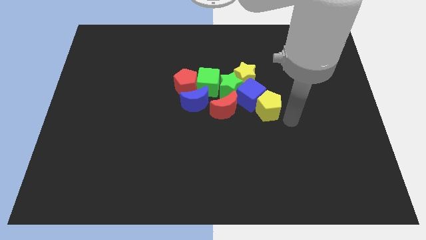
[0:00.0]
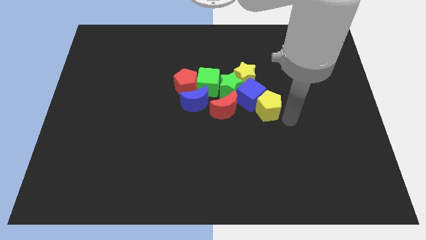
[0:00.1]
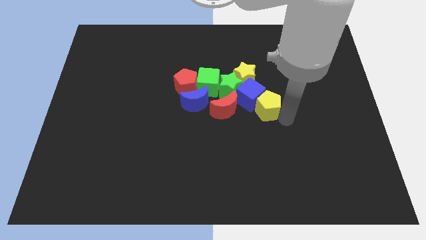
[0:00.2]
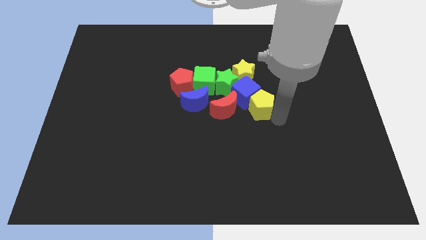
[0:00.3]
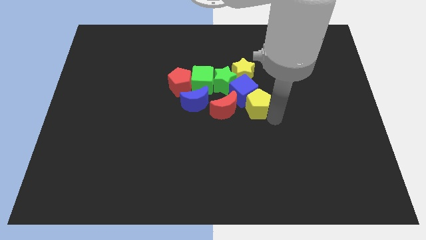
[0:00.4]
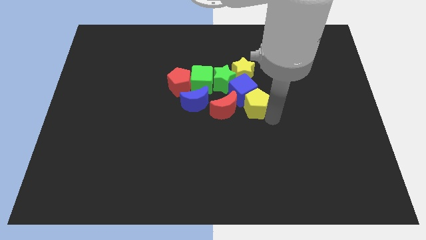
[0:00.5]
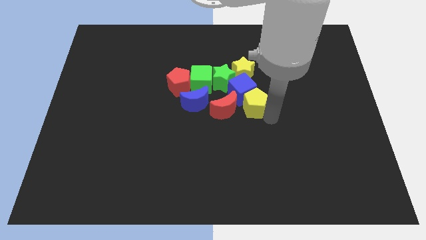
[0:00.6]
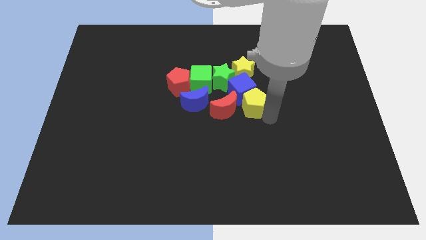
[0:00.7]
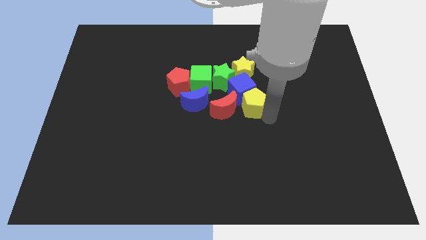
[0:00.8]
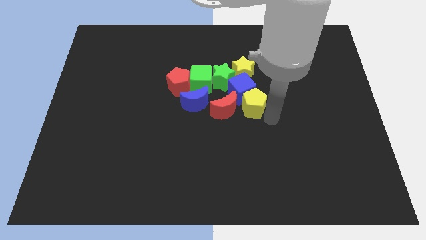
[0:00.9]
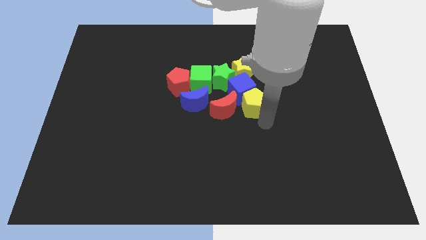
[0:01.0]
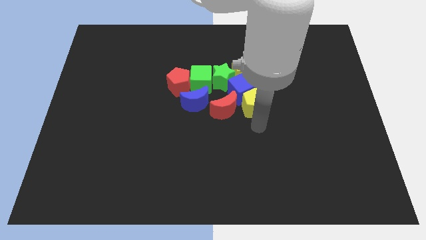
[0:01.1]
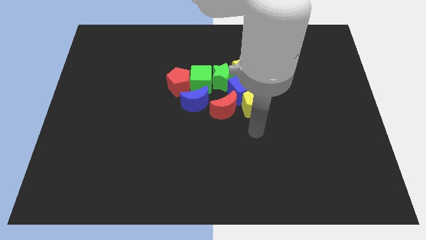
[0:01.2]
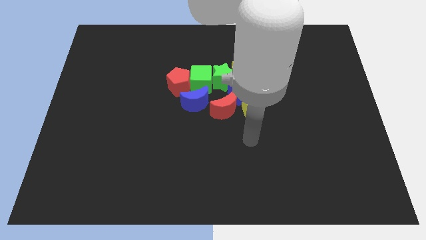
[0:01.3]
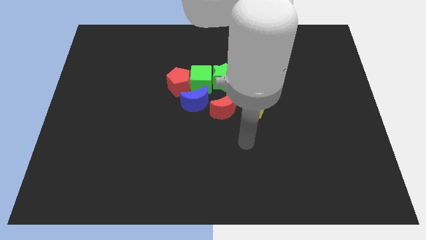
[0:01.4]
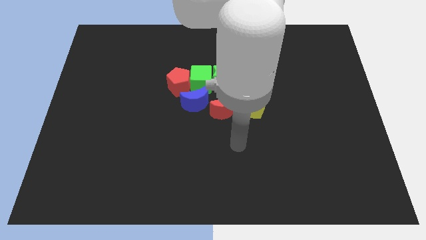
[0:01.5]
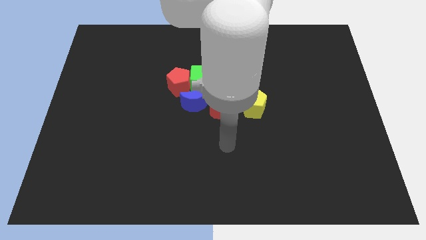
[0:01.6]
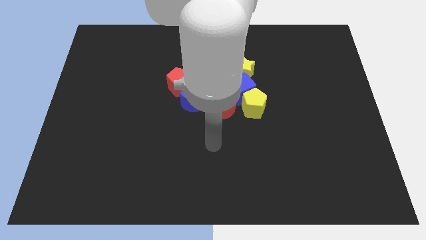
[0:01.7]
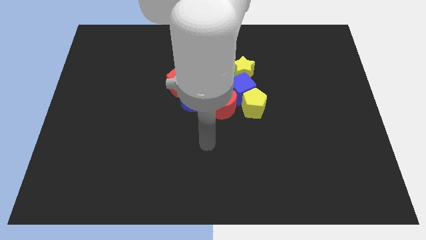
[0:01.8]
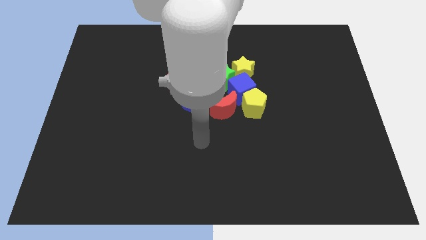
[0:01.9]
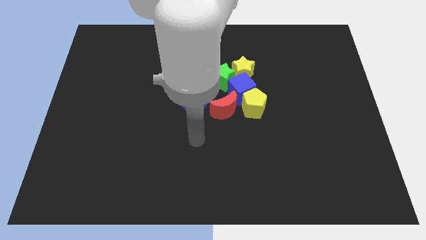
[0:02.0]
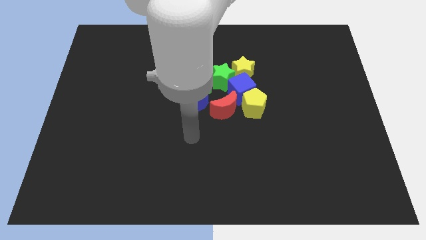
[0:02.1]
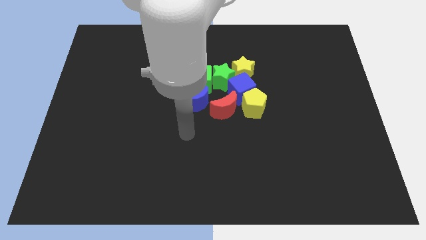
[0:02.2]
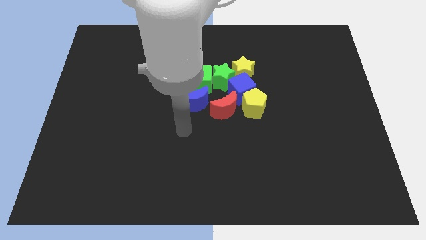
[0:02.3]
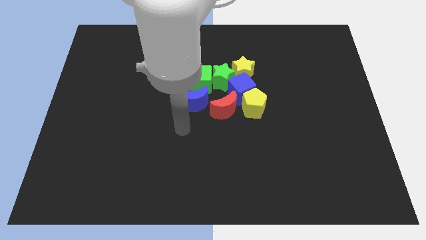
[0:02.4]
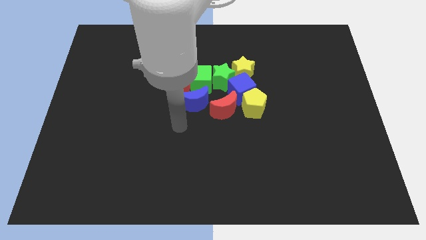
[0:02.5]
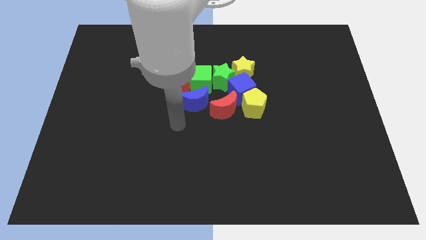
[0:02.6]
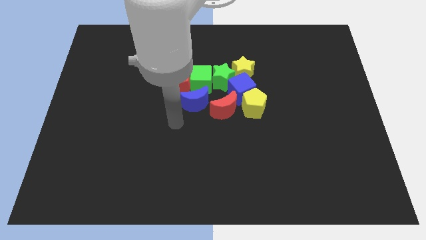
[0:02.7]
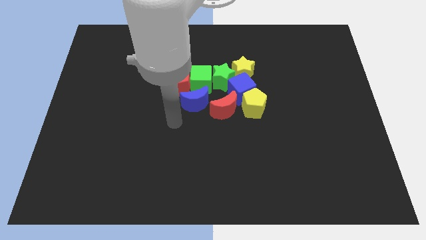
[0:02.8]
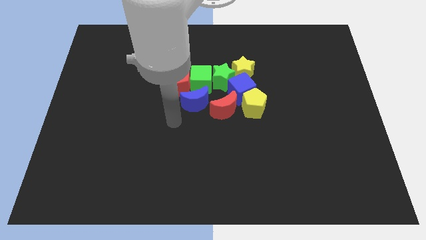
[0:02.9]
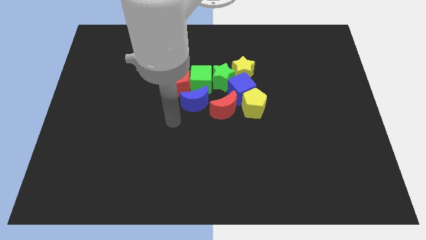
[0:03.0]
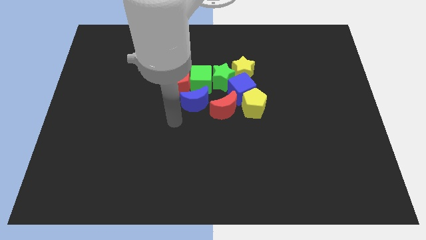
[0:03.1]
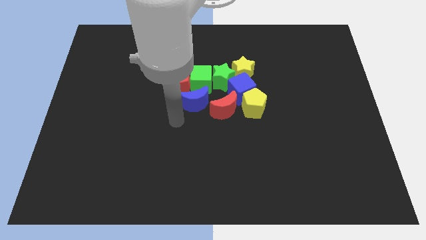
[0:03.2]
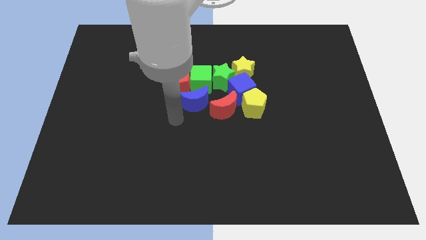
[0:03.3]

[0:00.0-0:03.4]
move yourself away from the yellow pentagon

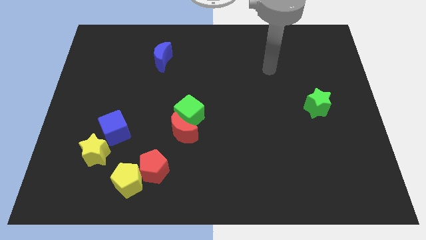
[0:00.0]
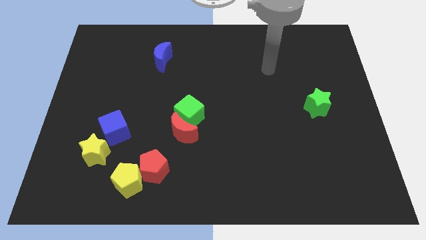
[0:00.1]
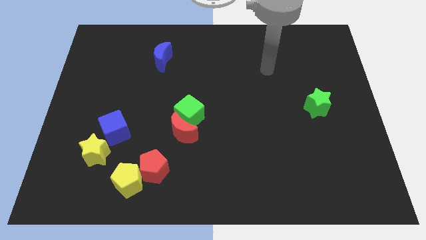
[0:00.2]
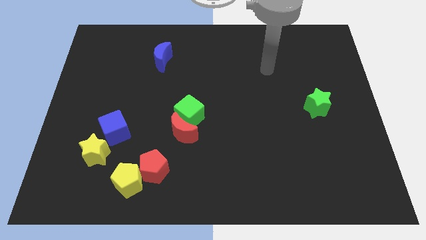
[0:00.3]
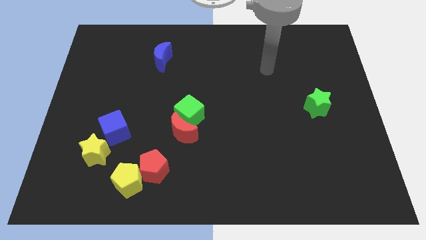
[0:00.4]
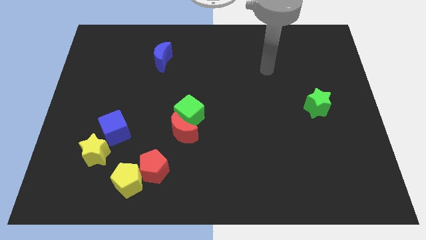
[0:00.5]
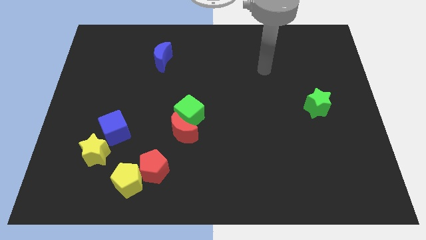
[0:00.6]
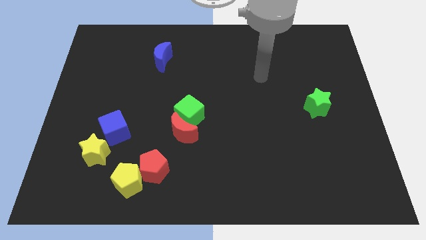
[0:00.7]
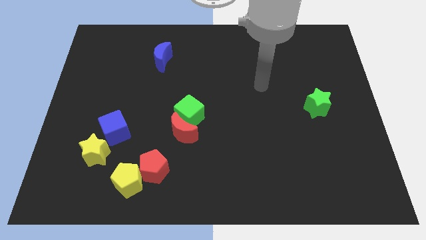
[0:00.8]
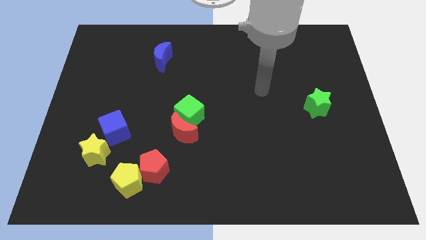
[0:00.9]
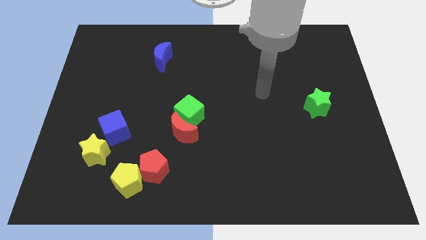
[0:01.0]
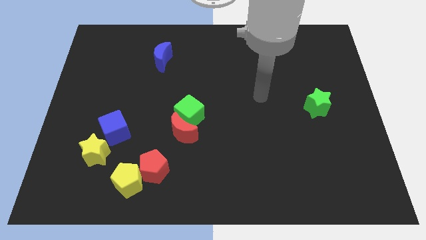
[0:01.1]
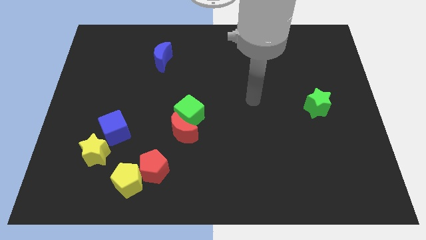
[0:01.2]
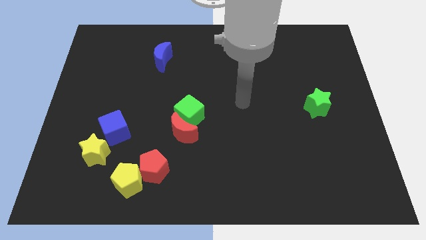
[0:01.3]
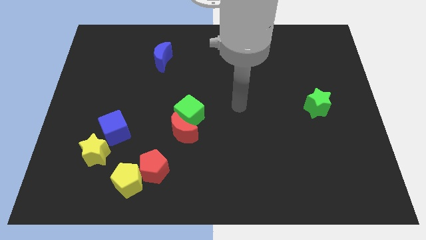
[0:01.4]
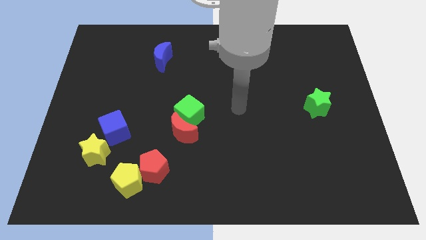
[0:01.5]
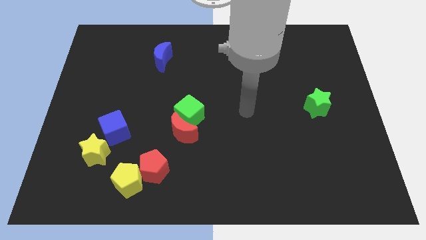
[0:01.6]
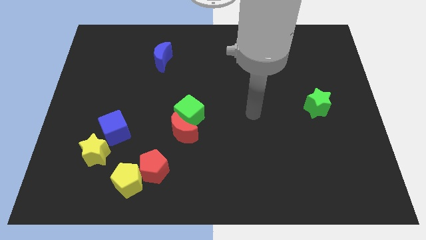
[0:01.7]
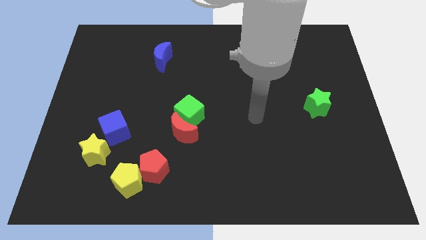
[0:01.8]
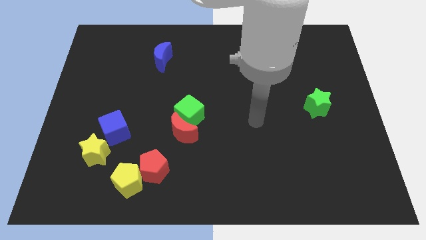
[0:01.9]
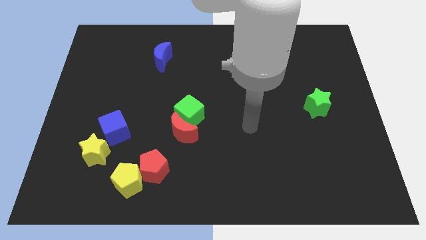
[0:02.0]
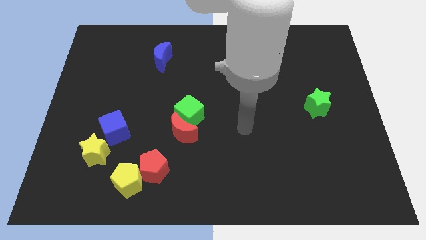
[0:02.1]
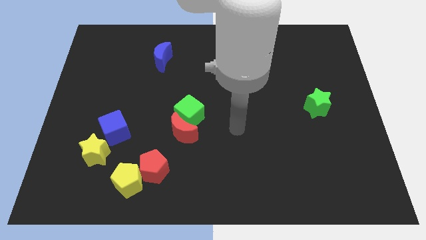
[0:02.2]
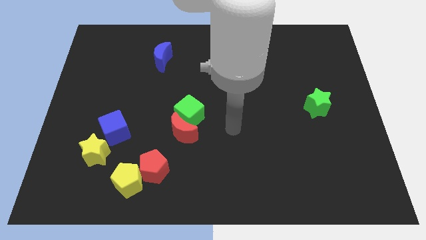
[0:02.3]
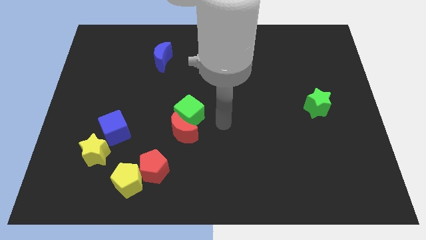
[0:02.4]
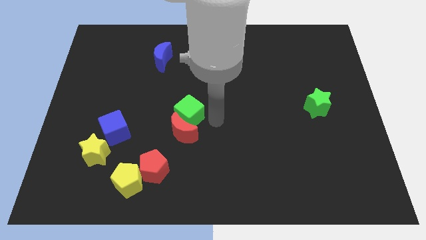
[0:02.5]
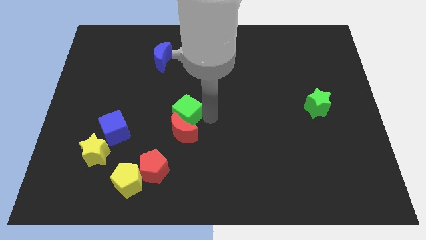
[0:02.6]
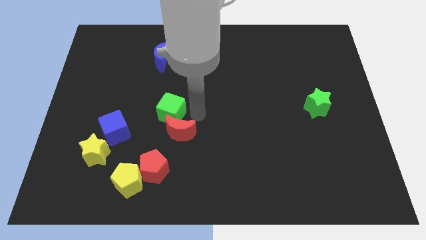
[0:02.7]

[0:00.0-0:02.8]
move the green cube slightly to the left

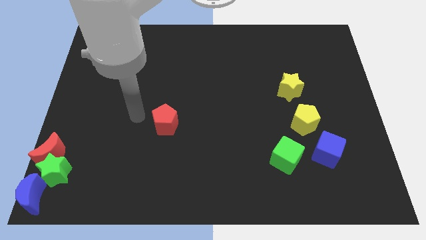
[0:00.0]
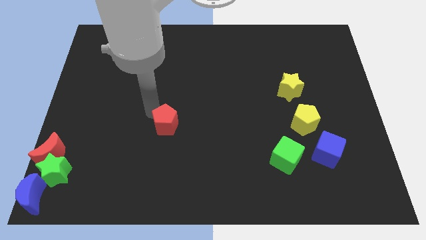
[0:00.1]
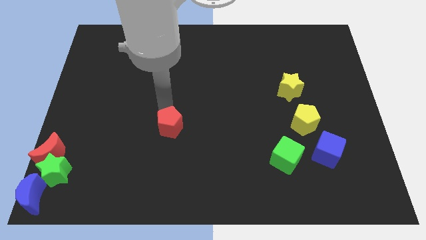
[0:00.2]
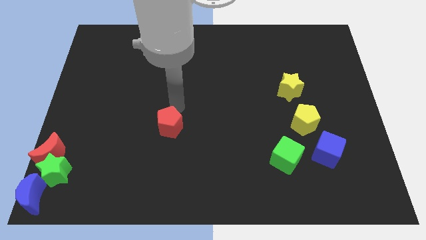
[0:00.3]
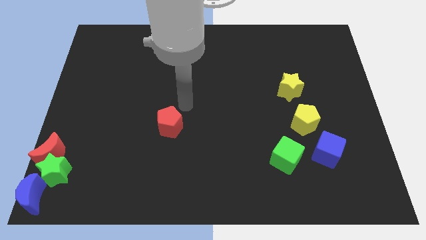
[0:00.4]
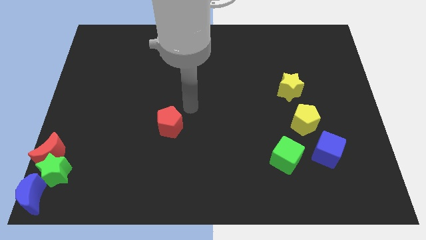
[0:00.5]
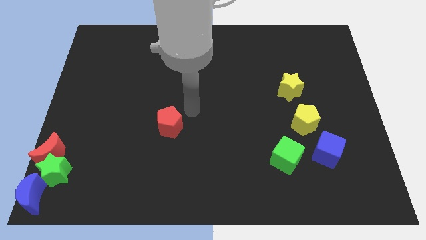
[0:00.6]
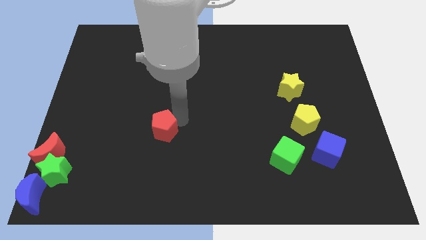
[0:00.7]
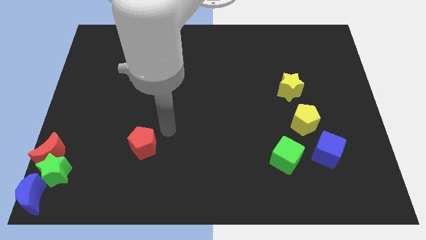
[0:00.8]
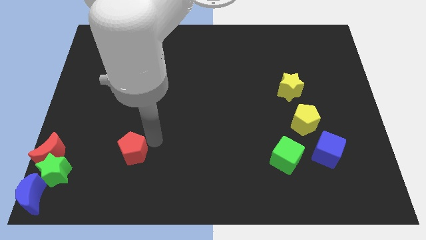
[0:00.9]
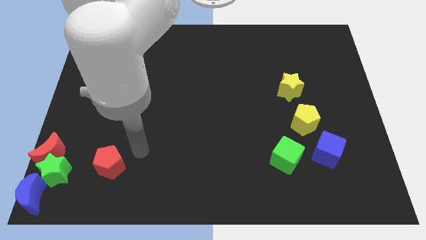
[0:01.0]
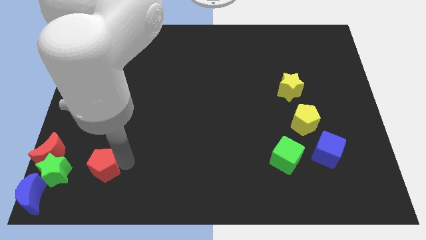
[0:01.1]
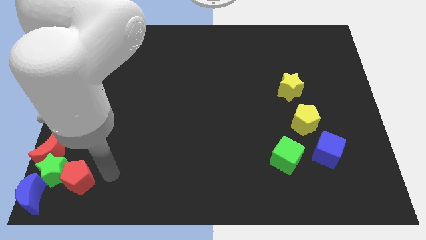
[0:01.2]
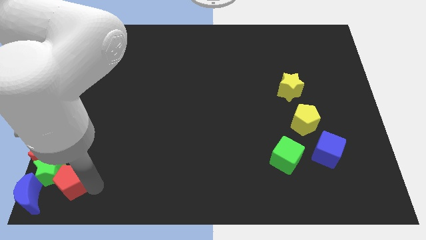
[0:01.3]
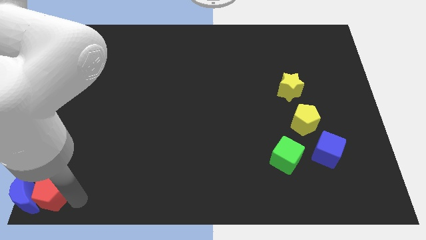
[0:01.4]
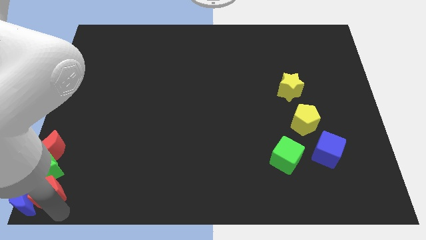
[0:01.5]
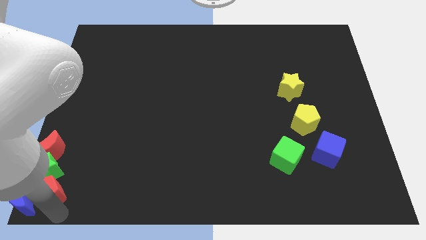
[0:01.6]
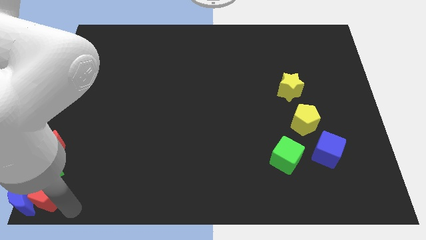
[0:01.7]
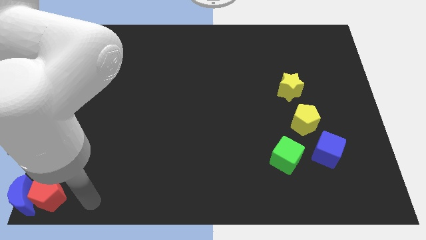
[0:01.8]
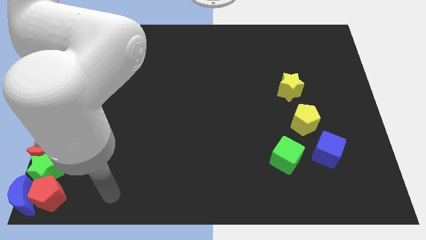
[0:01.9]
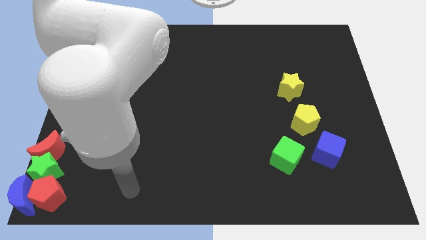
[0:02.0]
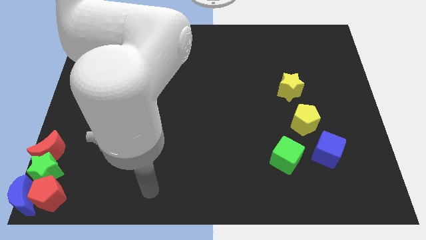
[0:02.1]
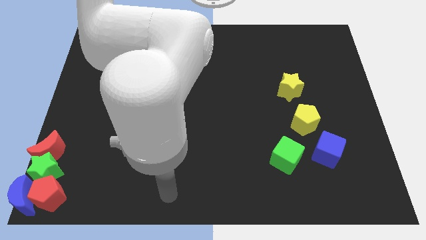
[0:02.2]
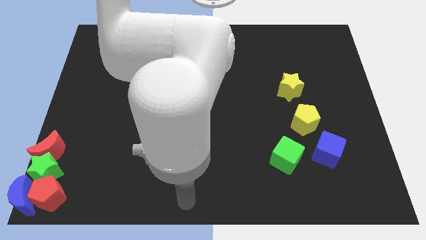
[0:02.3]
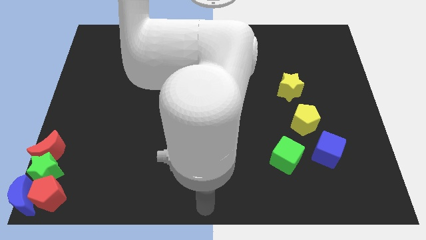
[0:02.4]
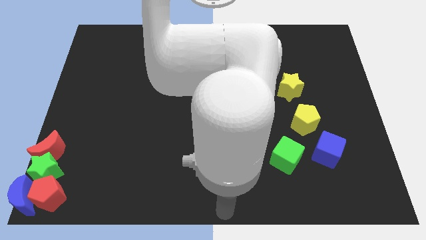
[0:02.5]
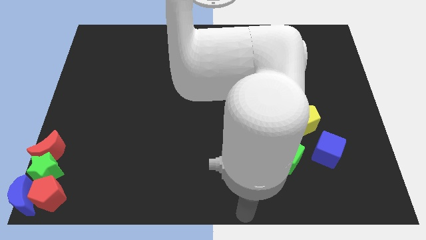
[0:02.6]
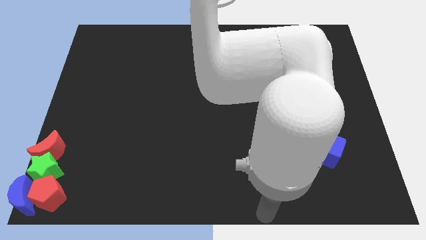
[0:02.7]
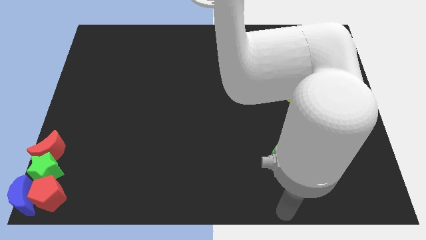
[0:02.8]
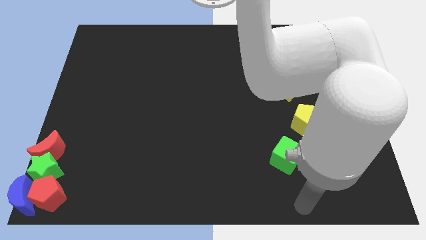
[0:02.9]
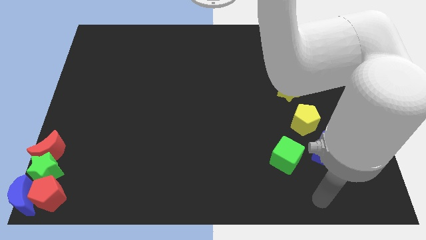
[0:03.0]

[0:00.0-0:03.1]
push the red pentagon into the blue crescent
